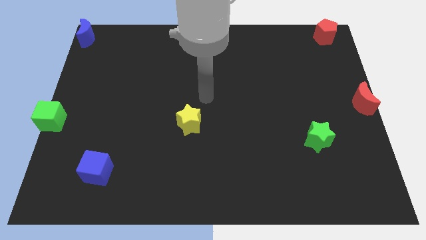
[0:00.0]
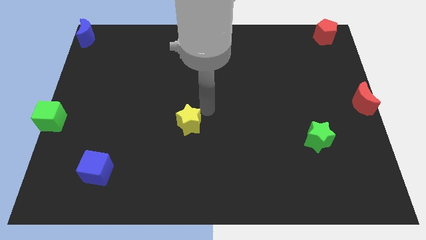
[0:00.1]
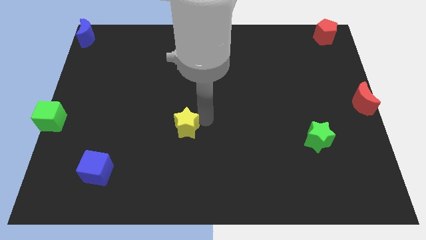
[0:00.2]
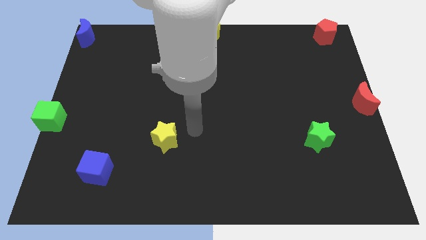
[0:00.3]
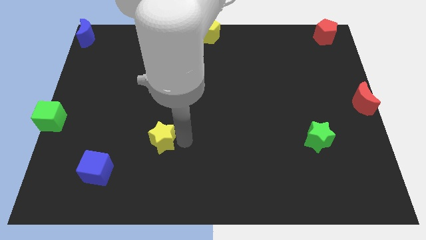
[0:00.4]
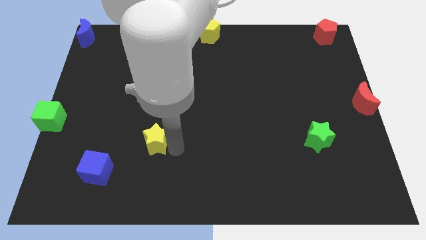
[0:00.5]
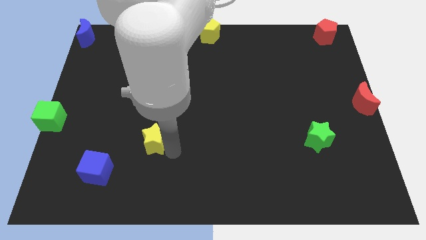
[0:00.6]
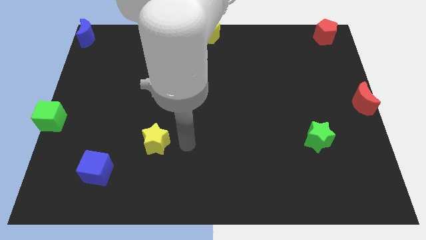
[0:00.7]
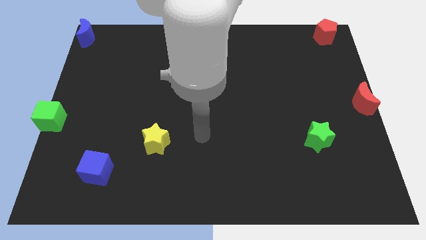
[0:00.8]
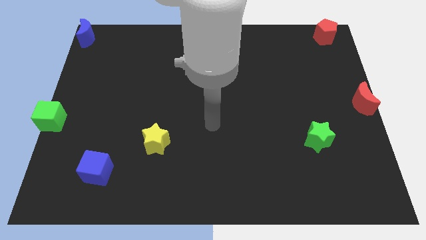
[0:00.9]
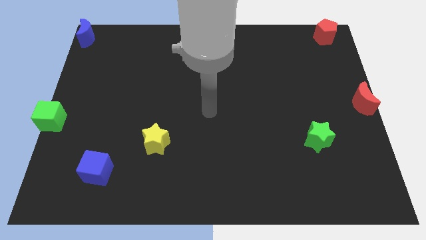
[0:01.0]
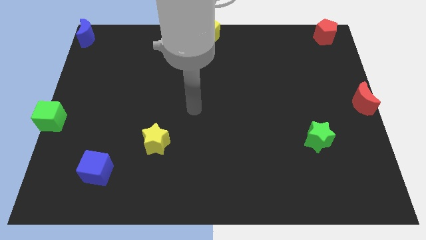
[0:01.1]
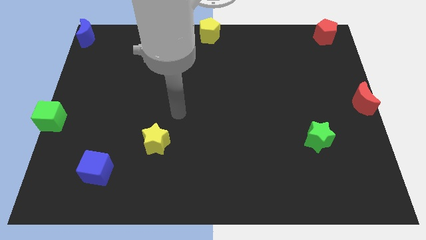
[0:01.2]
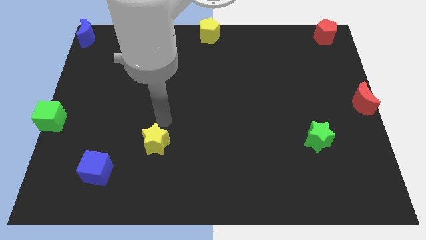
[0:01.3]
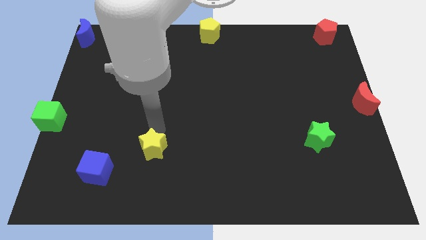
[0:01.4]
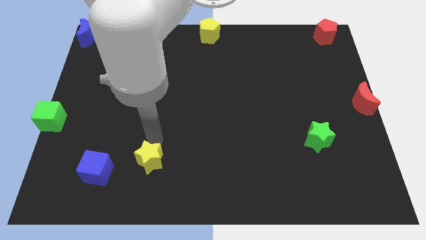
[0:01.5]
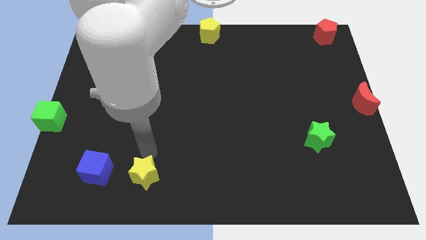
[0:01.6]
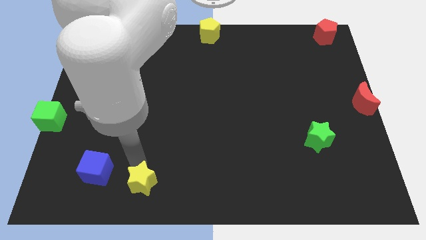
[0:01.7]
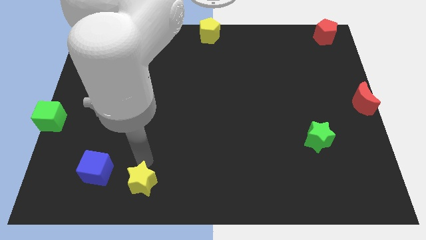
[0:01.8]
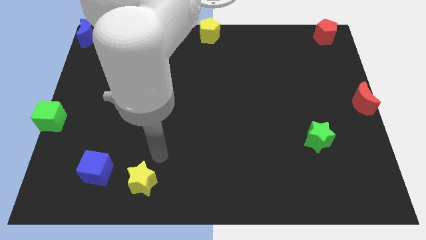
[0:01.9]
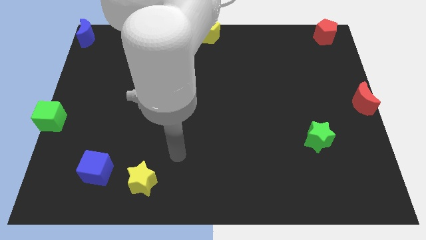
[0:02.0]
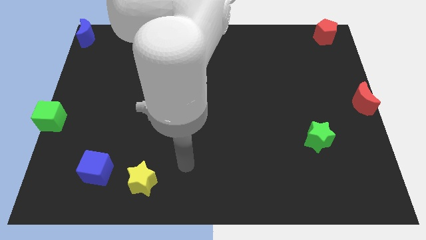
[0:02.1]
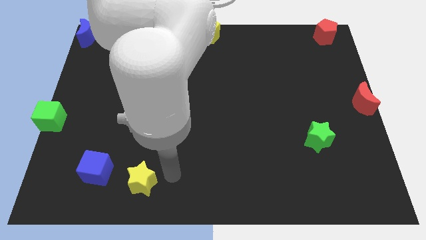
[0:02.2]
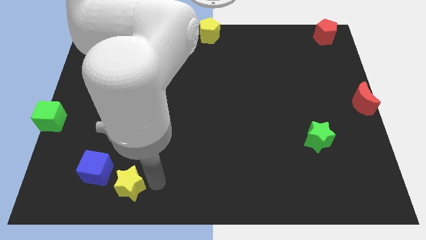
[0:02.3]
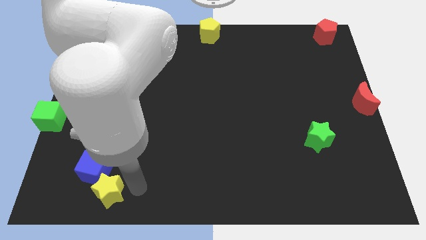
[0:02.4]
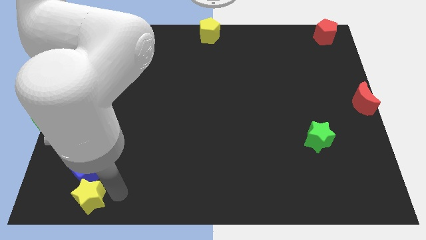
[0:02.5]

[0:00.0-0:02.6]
push the yellow star towards the bottom of the blue cube

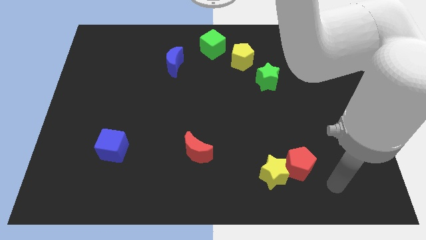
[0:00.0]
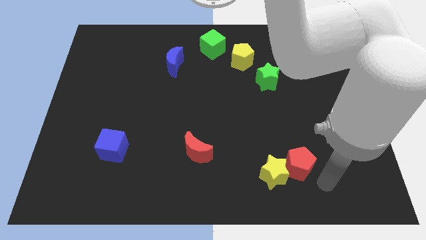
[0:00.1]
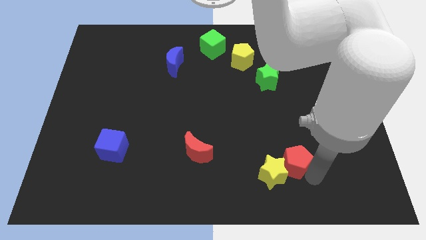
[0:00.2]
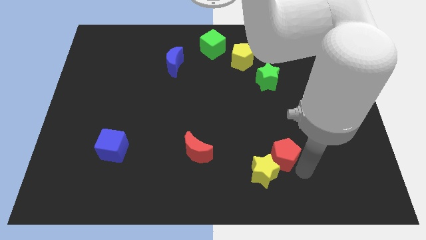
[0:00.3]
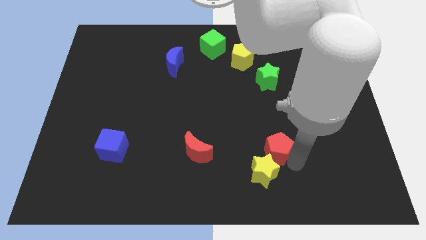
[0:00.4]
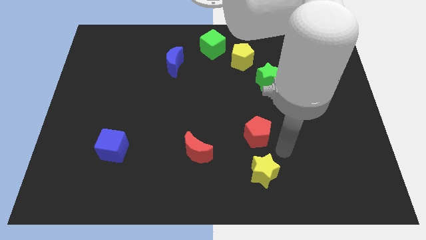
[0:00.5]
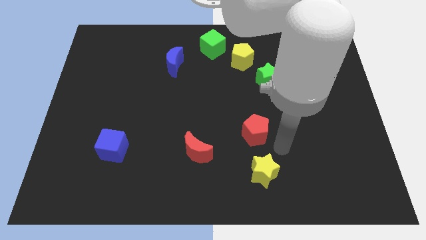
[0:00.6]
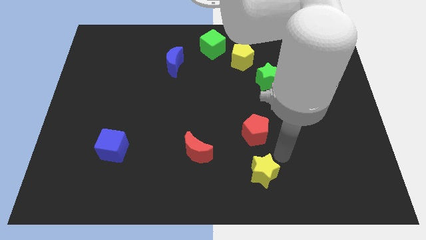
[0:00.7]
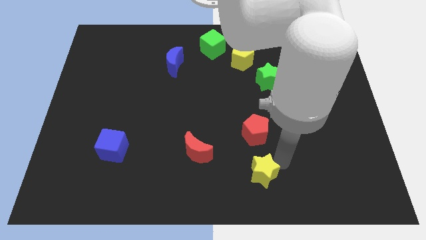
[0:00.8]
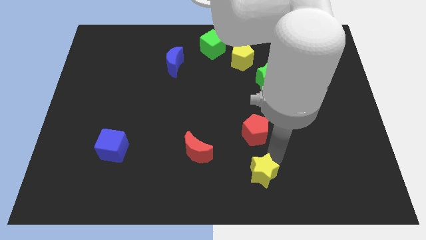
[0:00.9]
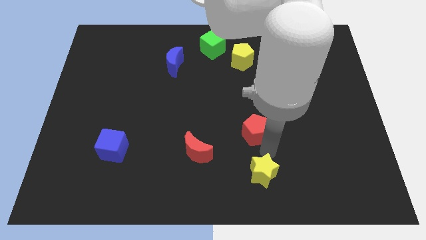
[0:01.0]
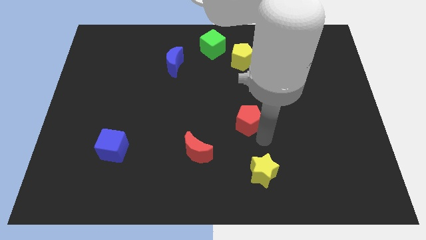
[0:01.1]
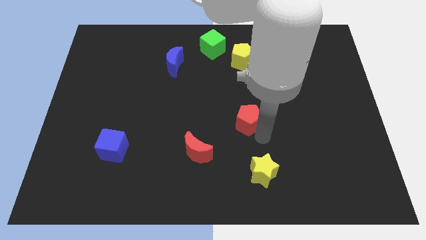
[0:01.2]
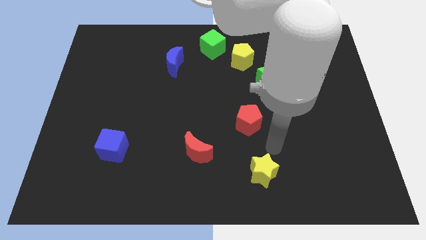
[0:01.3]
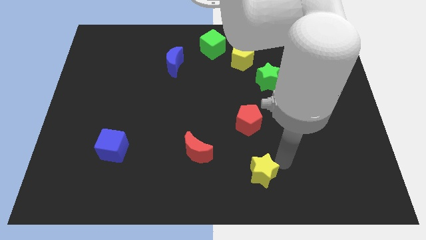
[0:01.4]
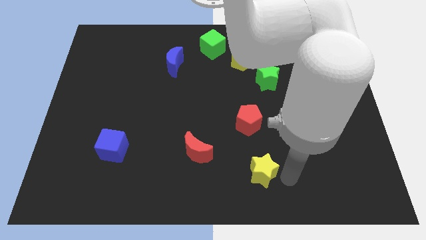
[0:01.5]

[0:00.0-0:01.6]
separate the red pentagon from yellow star

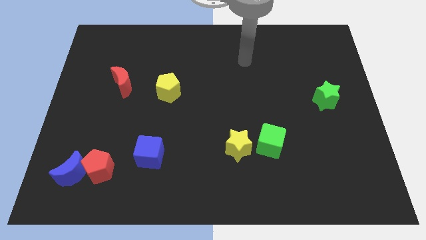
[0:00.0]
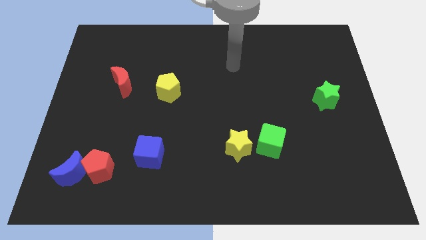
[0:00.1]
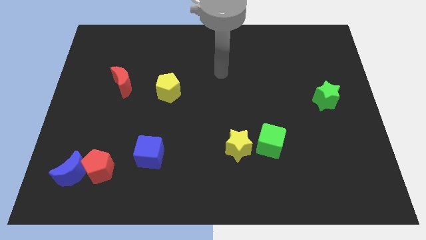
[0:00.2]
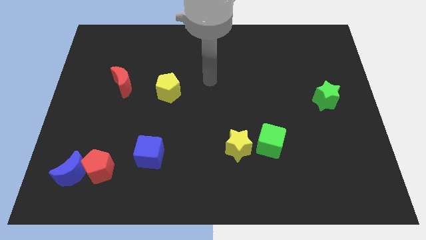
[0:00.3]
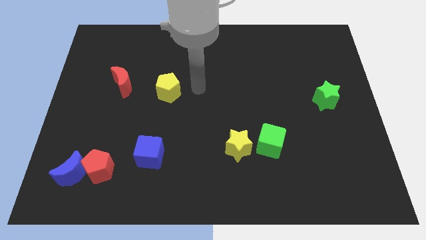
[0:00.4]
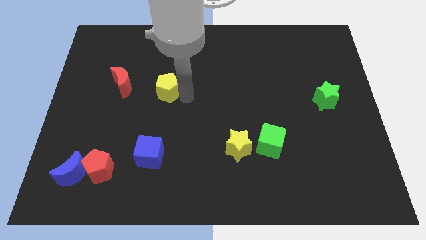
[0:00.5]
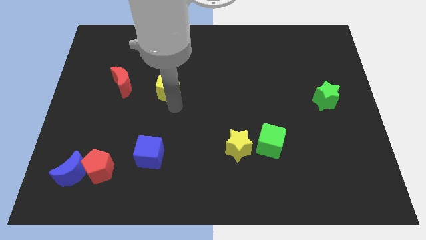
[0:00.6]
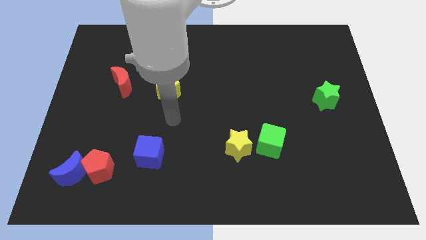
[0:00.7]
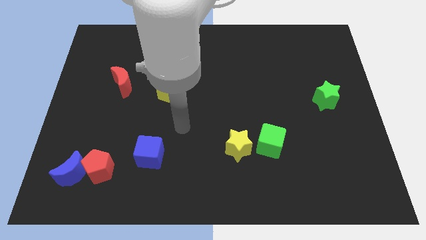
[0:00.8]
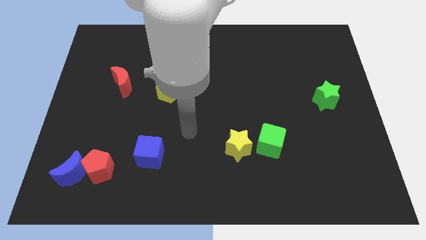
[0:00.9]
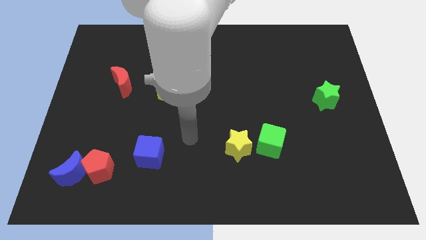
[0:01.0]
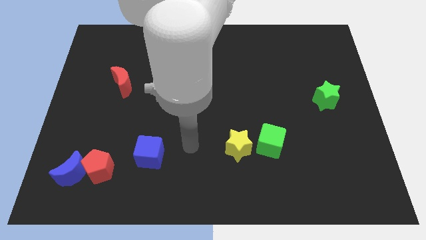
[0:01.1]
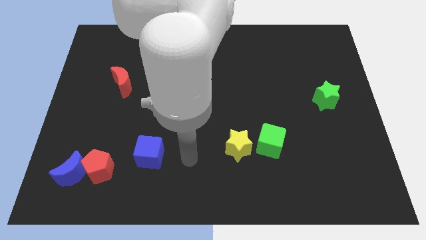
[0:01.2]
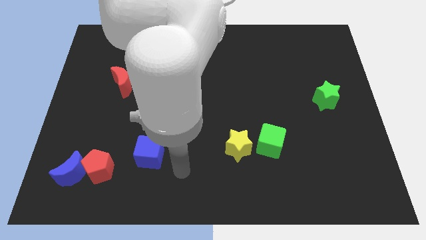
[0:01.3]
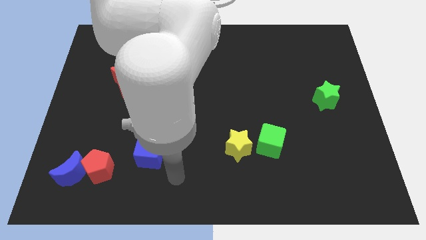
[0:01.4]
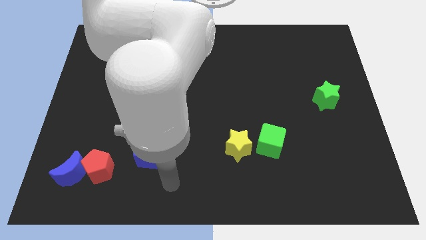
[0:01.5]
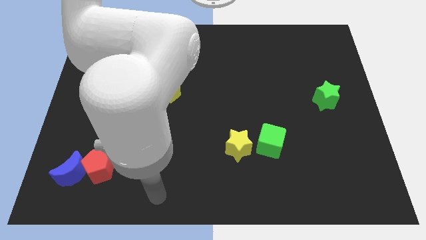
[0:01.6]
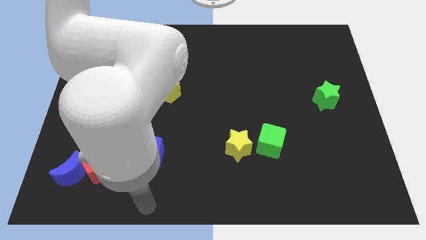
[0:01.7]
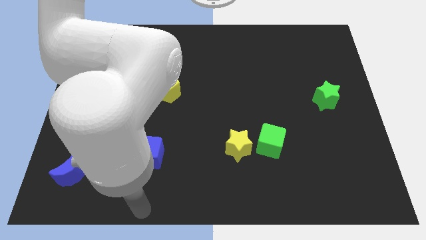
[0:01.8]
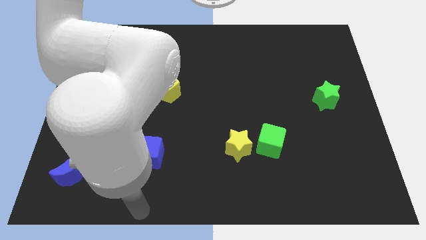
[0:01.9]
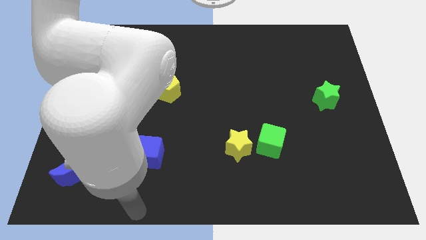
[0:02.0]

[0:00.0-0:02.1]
move the arm parallel to the bottom of the blue cube

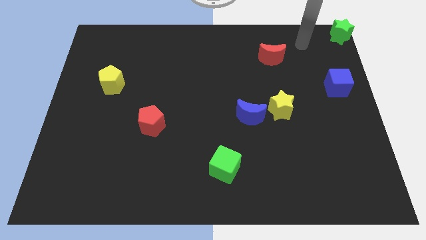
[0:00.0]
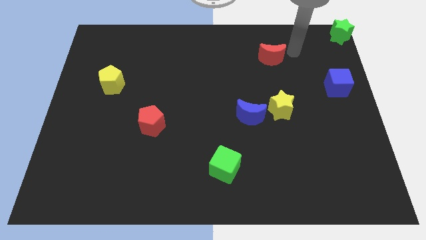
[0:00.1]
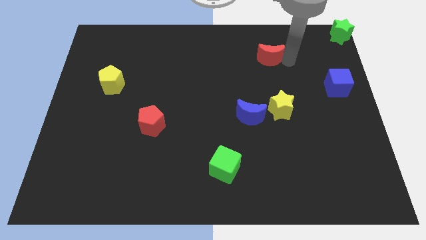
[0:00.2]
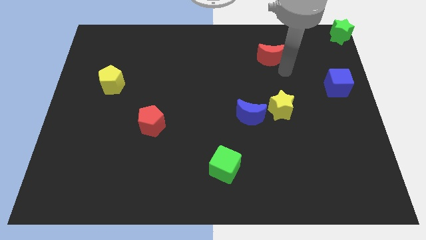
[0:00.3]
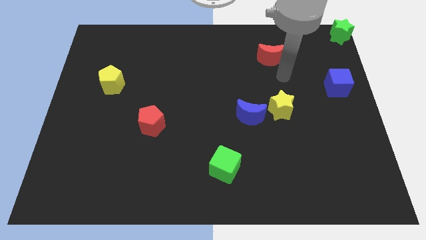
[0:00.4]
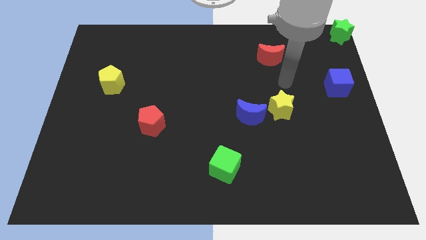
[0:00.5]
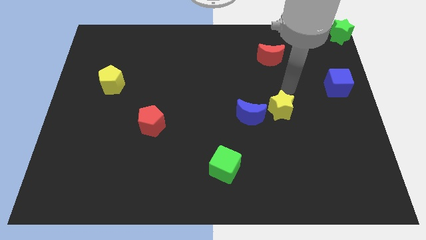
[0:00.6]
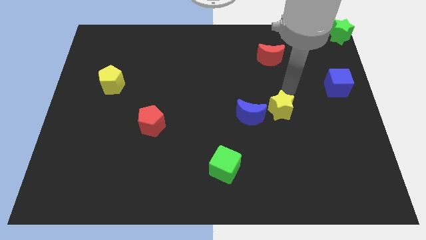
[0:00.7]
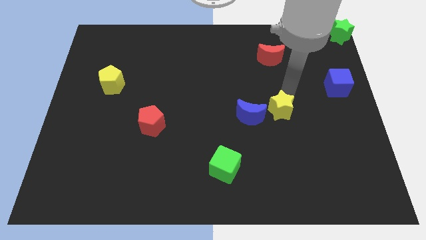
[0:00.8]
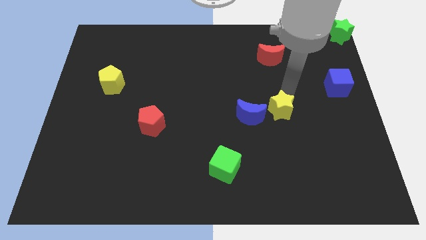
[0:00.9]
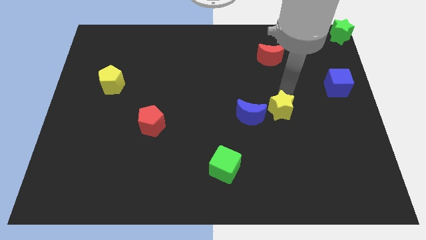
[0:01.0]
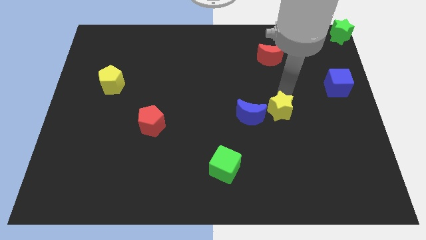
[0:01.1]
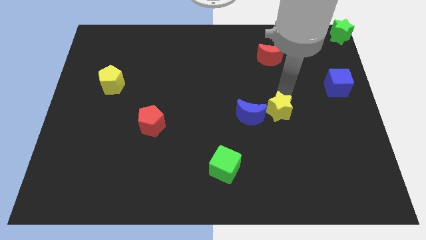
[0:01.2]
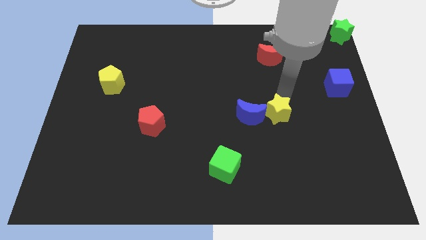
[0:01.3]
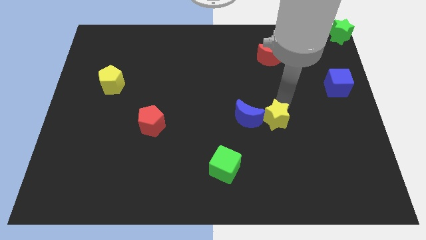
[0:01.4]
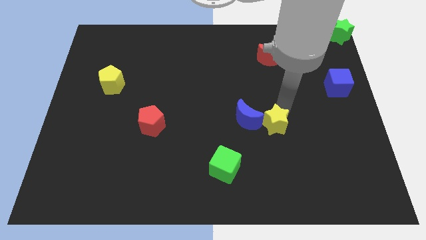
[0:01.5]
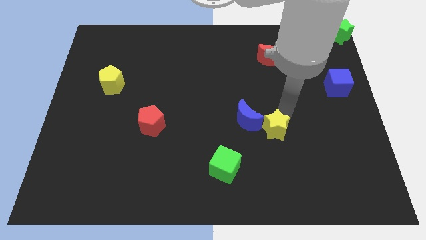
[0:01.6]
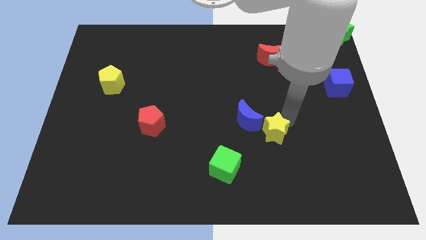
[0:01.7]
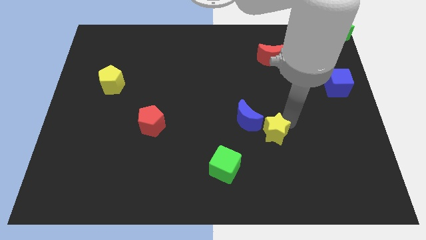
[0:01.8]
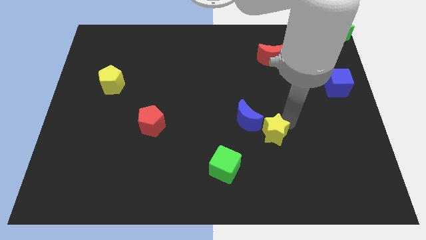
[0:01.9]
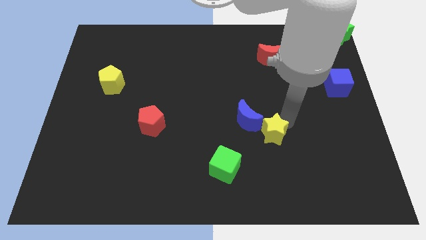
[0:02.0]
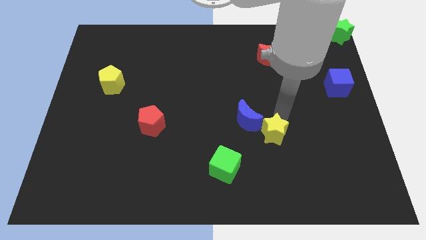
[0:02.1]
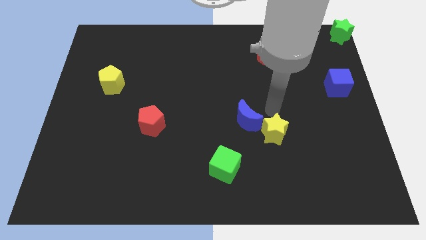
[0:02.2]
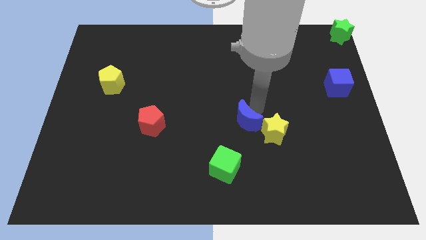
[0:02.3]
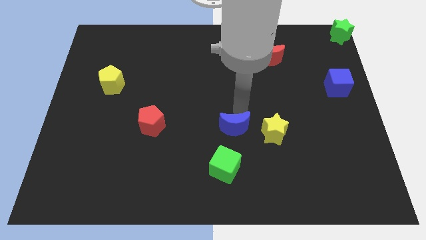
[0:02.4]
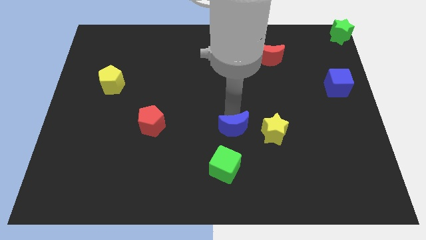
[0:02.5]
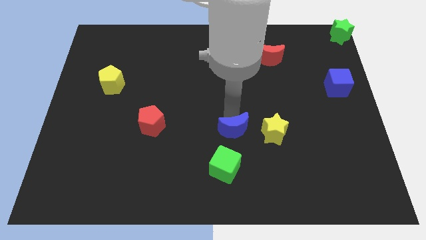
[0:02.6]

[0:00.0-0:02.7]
separate the blue crescent from the yellow star

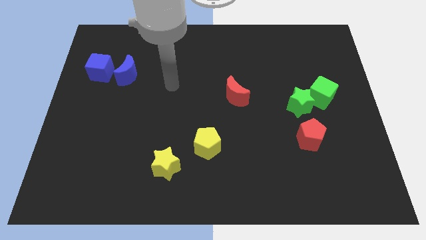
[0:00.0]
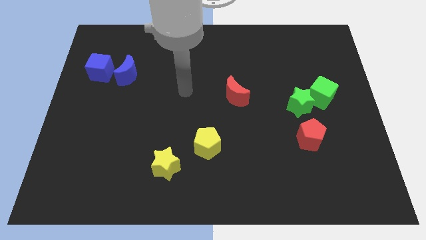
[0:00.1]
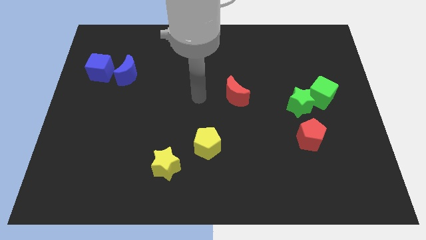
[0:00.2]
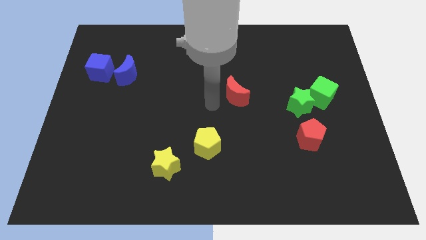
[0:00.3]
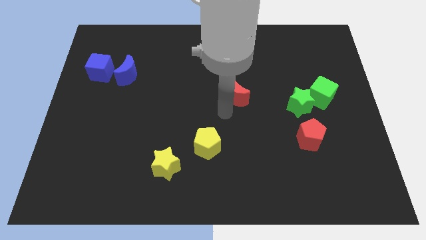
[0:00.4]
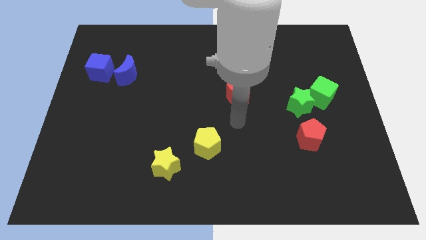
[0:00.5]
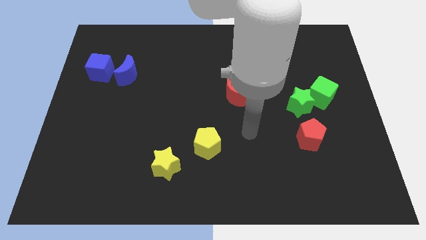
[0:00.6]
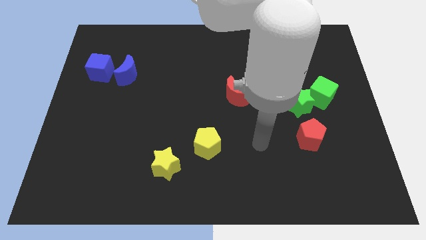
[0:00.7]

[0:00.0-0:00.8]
place your arm in between the yellow pentagon and red pentagon
